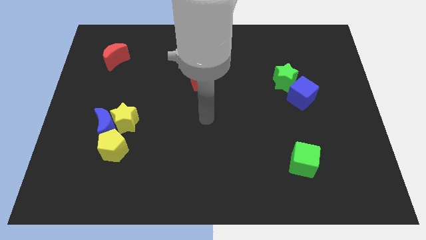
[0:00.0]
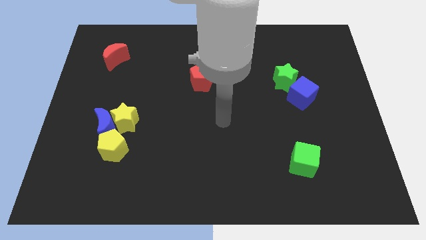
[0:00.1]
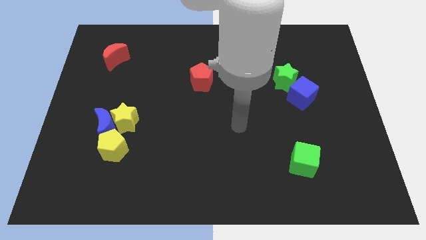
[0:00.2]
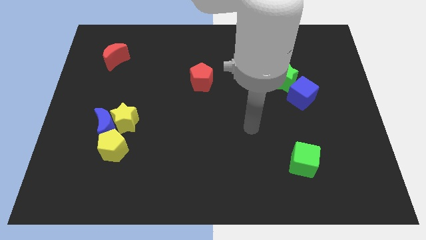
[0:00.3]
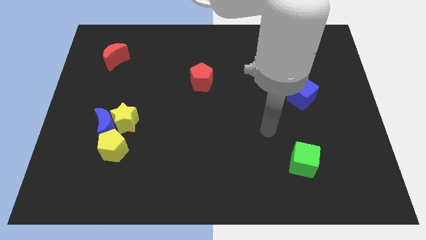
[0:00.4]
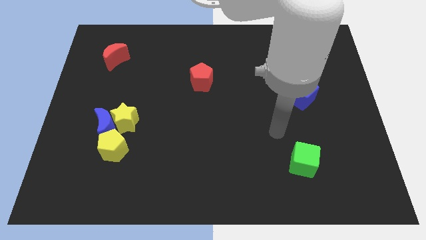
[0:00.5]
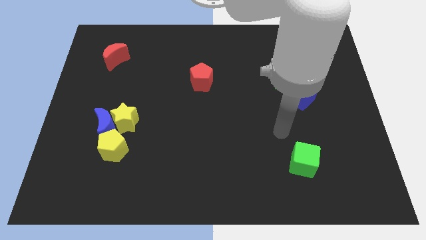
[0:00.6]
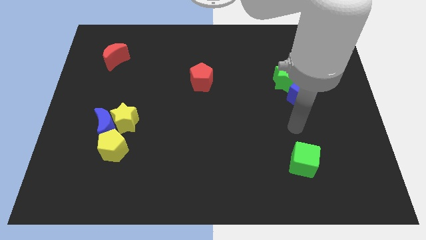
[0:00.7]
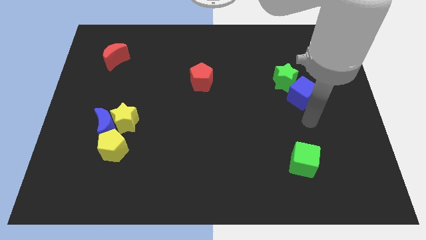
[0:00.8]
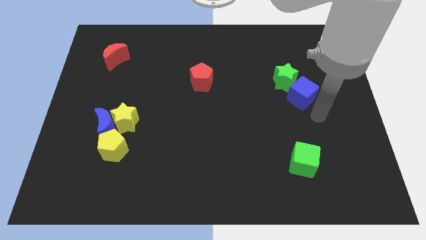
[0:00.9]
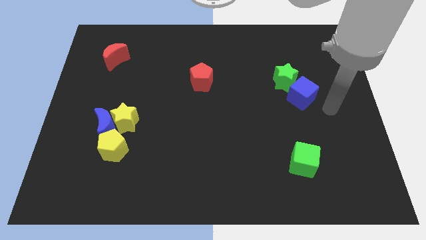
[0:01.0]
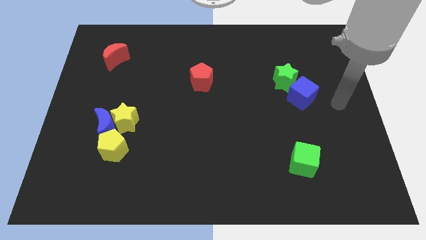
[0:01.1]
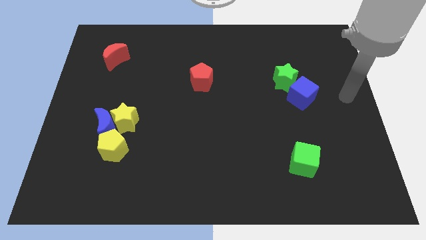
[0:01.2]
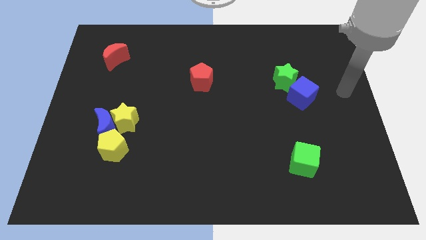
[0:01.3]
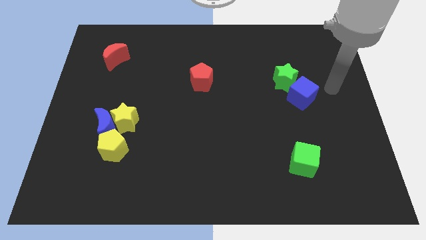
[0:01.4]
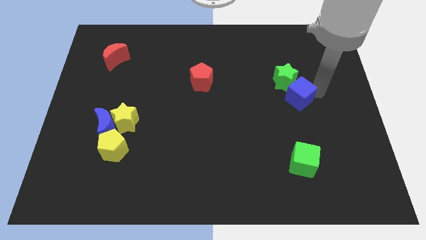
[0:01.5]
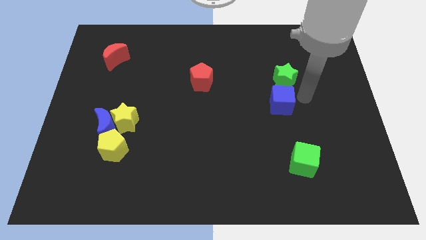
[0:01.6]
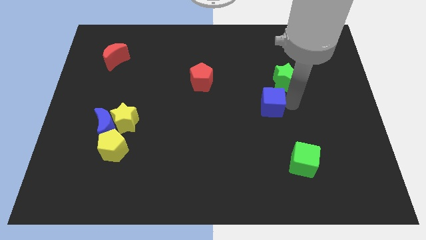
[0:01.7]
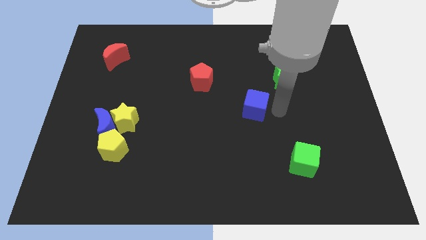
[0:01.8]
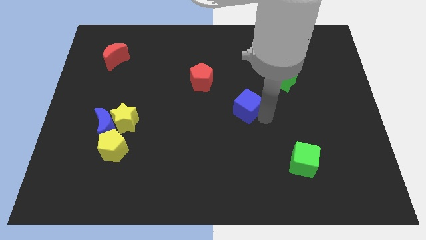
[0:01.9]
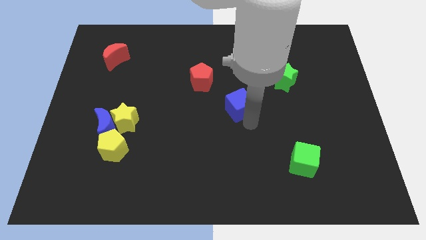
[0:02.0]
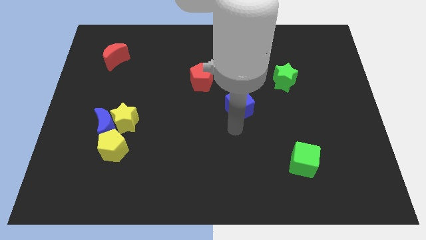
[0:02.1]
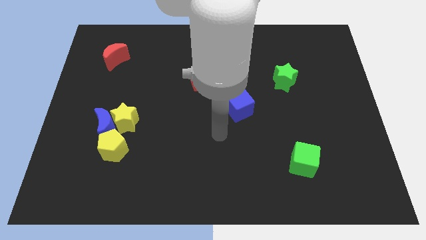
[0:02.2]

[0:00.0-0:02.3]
separate the blue cube from the green star

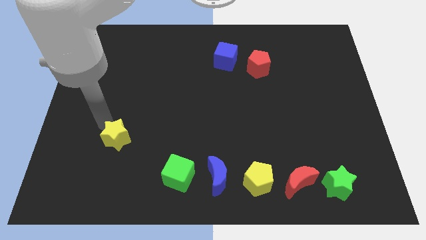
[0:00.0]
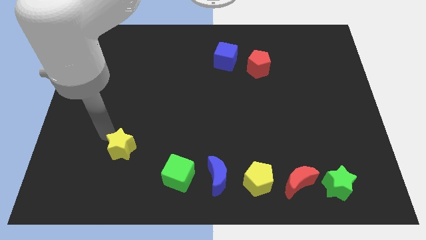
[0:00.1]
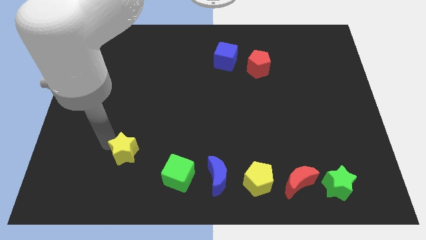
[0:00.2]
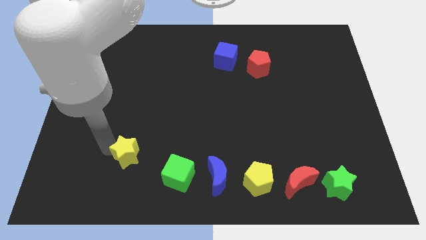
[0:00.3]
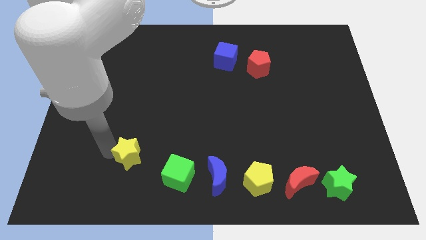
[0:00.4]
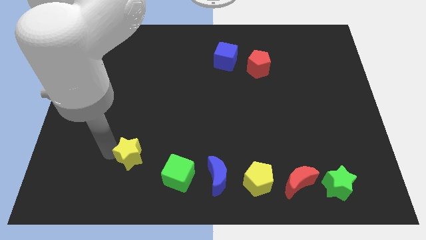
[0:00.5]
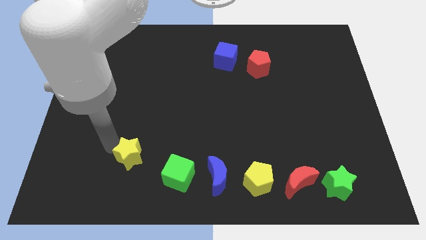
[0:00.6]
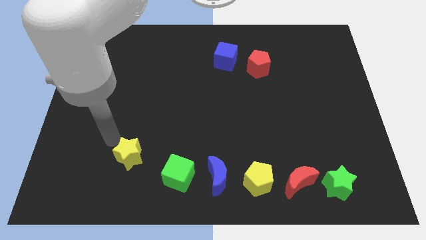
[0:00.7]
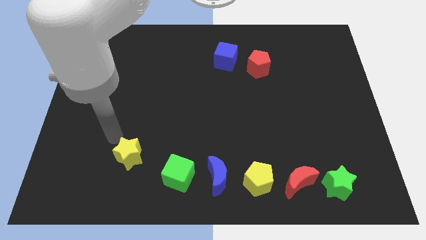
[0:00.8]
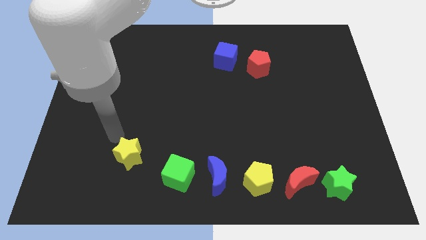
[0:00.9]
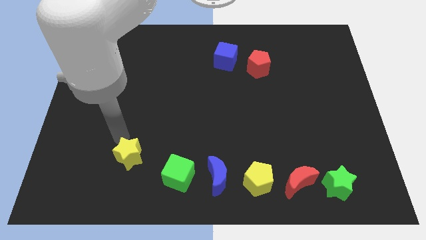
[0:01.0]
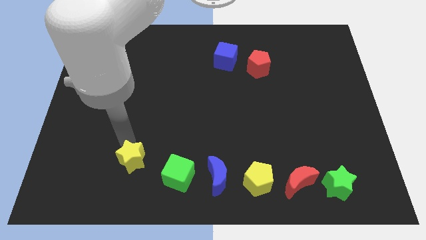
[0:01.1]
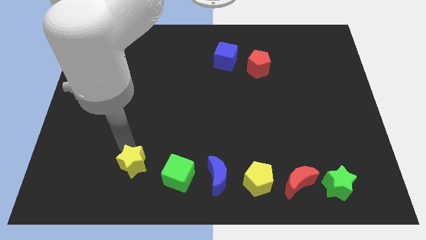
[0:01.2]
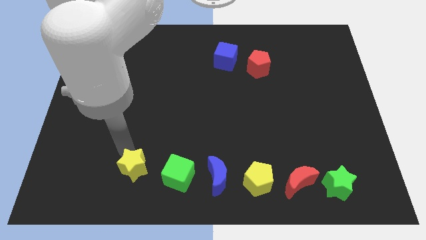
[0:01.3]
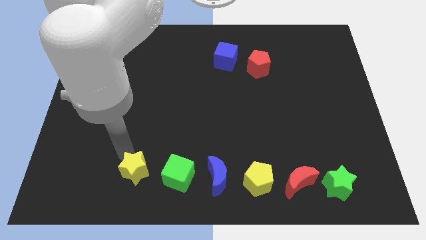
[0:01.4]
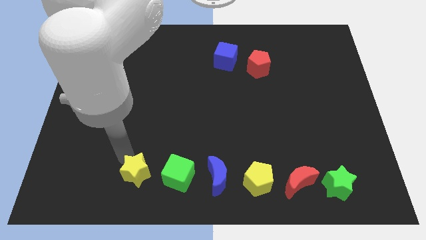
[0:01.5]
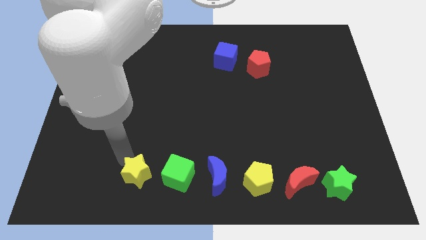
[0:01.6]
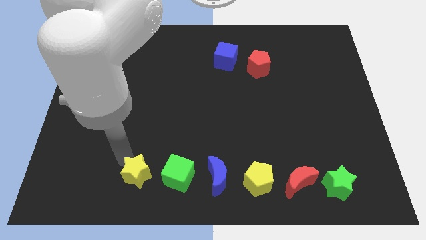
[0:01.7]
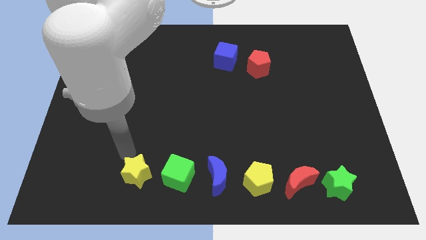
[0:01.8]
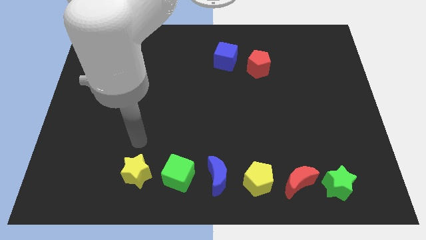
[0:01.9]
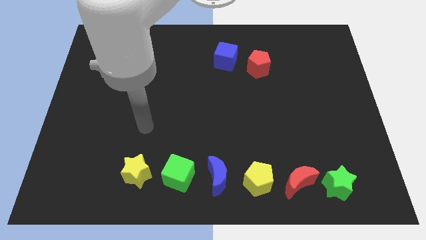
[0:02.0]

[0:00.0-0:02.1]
push yellow star towards green cube

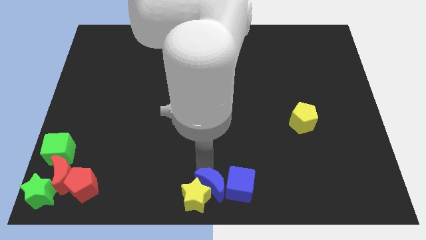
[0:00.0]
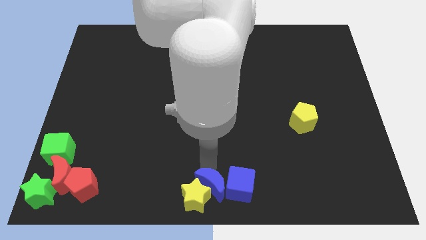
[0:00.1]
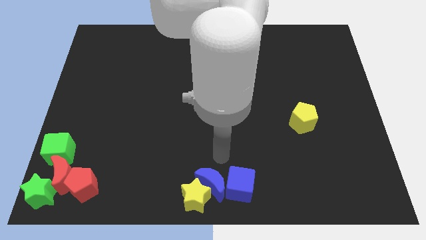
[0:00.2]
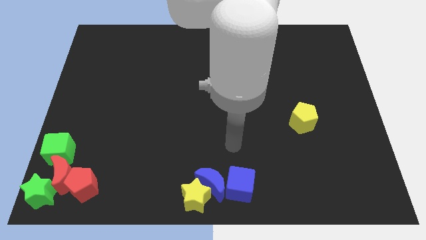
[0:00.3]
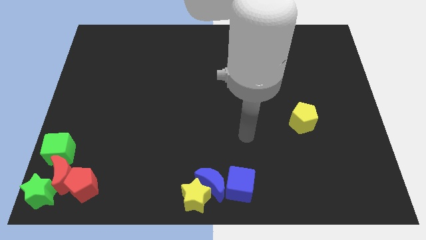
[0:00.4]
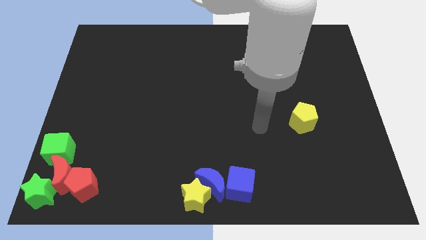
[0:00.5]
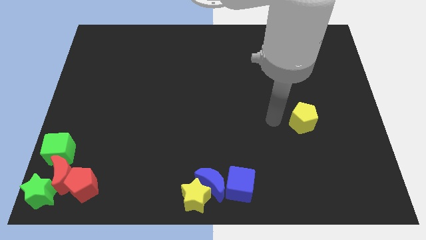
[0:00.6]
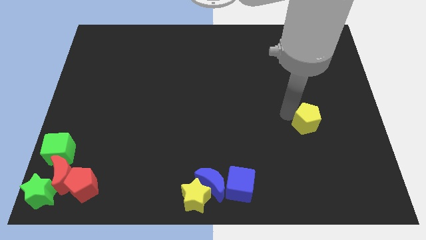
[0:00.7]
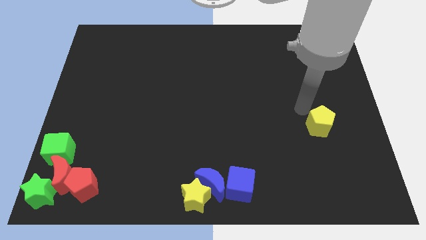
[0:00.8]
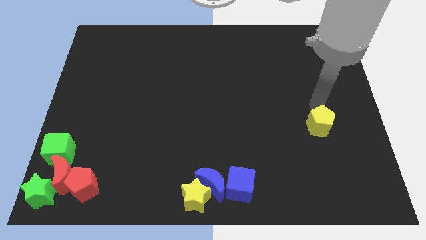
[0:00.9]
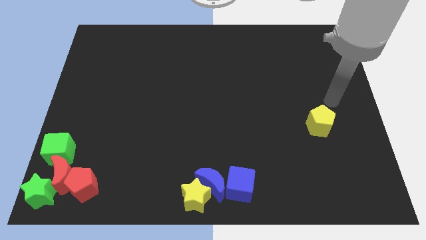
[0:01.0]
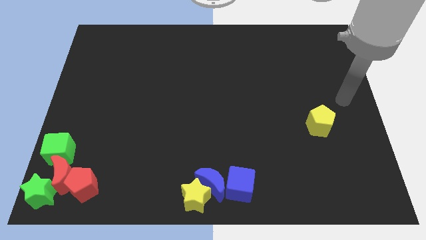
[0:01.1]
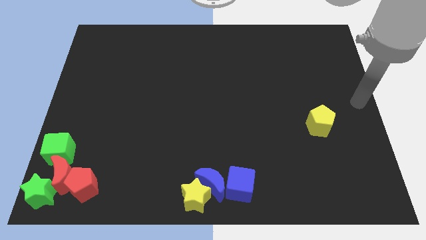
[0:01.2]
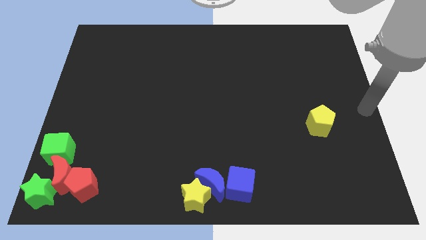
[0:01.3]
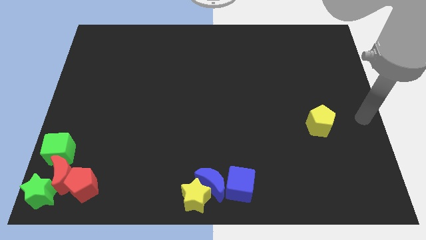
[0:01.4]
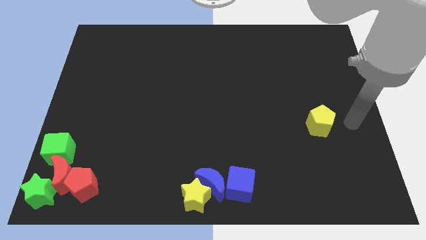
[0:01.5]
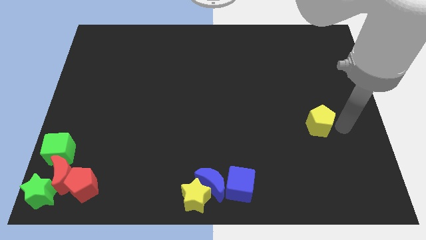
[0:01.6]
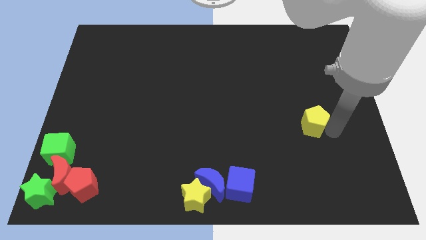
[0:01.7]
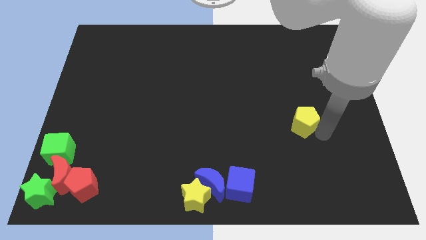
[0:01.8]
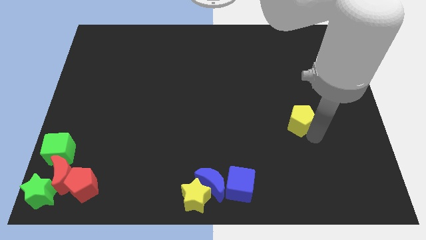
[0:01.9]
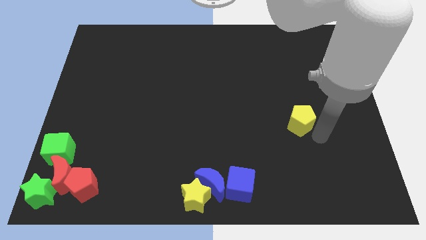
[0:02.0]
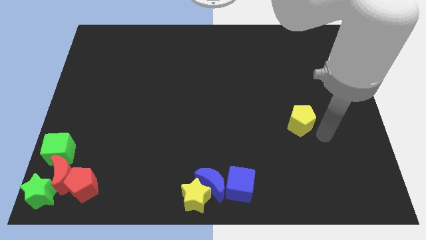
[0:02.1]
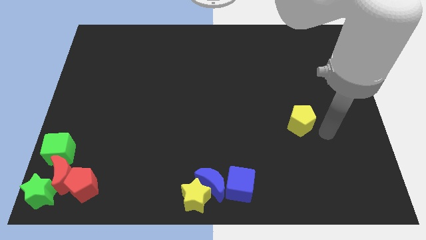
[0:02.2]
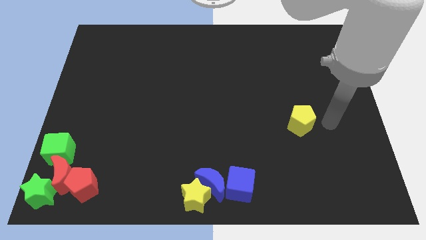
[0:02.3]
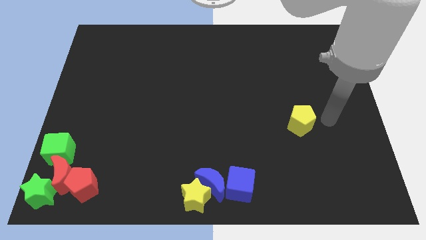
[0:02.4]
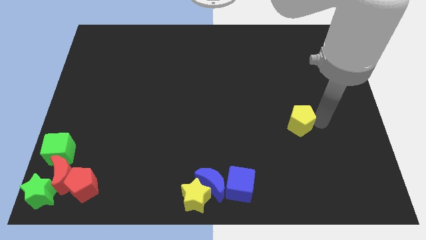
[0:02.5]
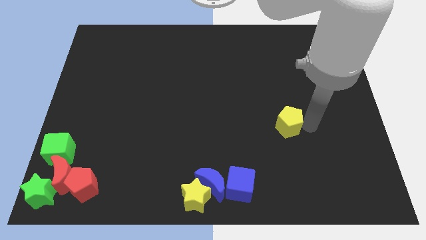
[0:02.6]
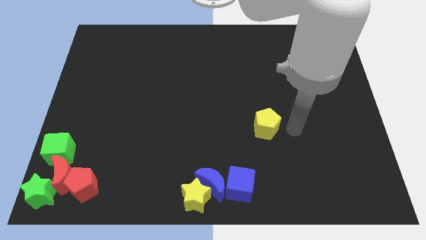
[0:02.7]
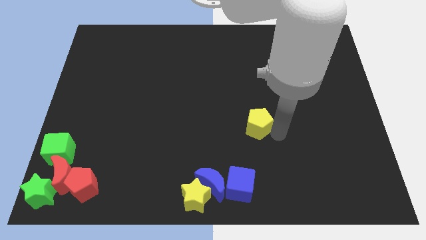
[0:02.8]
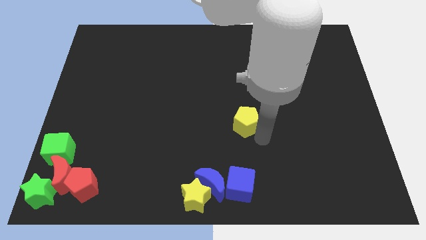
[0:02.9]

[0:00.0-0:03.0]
push yellow pentagon above blue cube

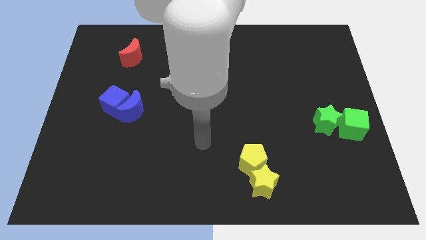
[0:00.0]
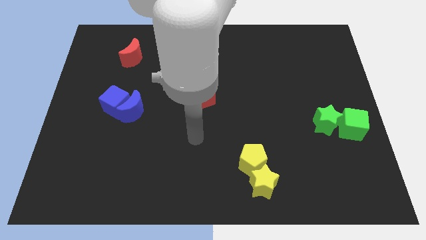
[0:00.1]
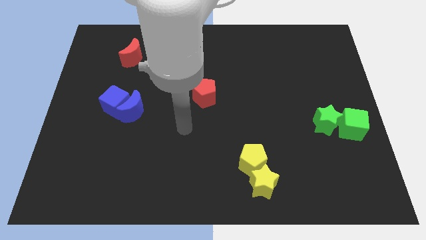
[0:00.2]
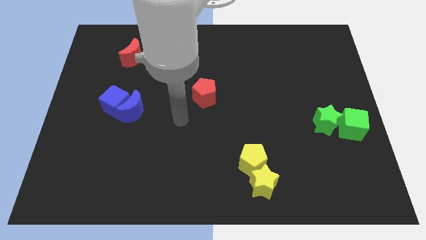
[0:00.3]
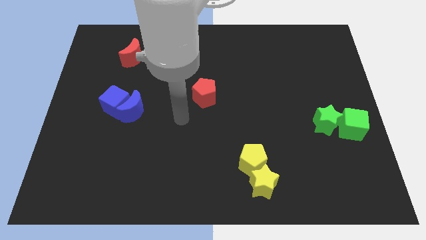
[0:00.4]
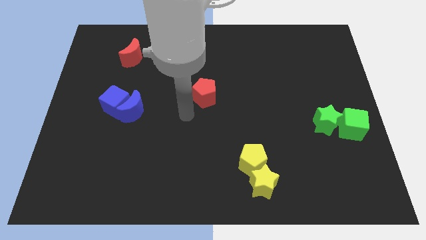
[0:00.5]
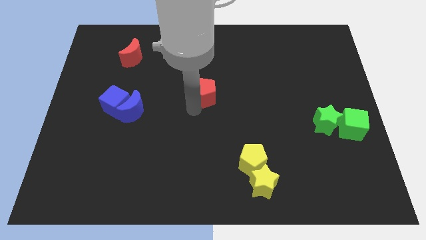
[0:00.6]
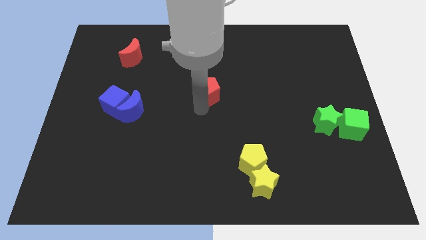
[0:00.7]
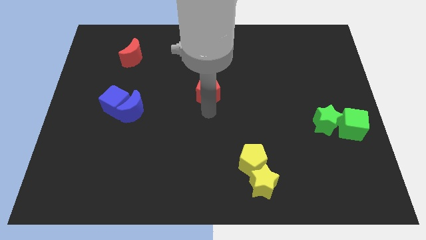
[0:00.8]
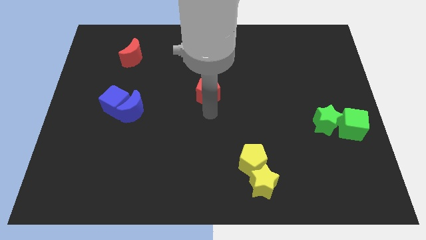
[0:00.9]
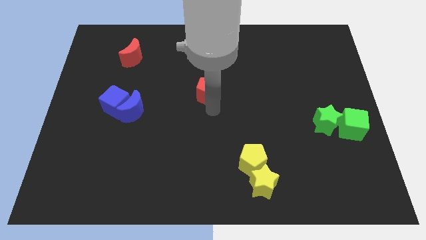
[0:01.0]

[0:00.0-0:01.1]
go near red pentgaon

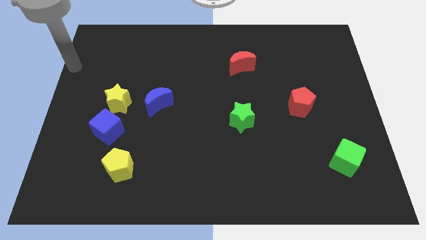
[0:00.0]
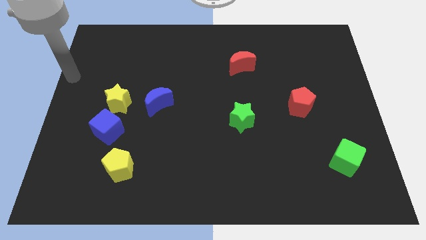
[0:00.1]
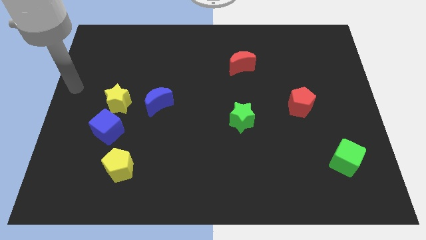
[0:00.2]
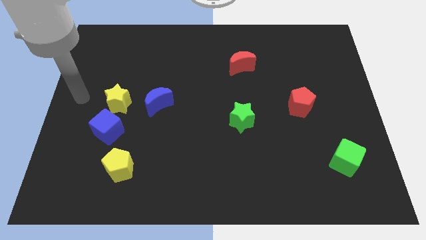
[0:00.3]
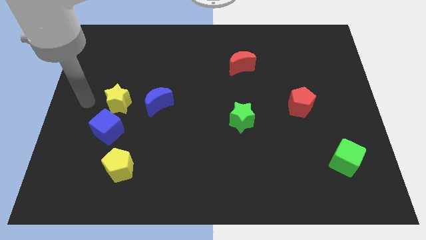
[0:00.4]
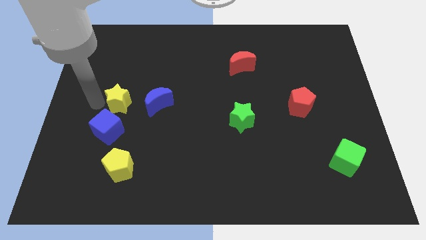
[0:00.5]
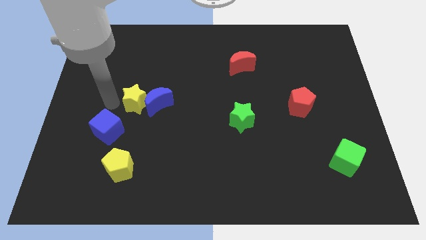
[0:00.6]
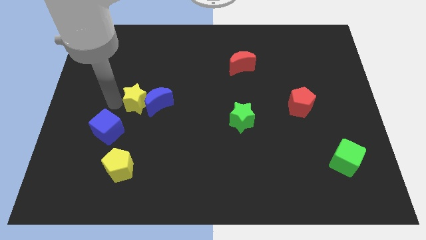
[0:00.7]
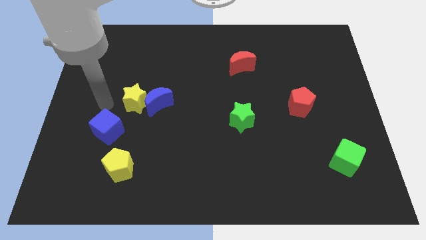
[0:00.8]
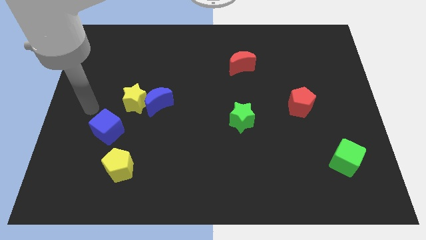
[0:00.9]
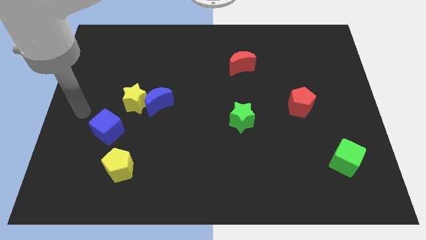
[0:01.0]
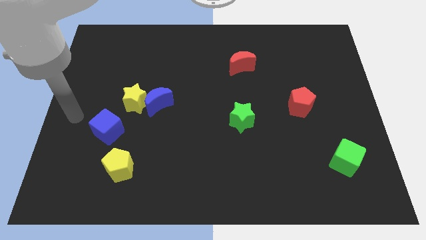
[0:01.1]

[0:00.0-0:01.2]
push yellow star into the blue moon
